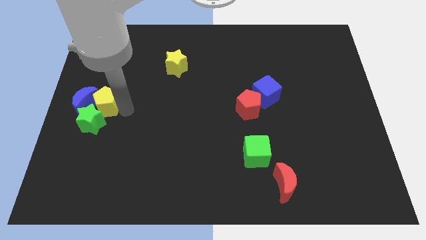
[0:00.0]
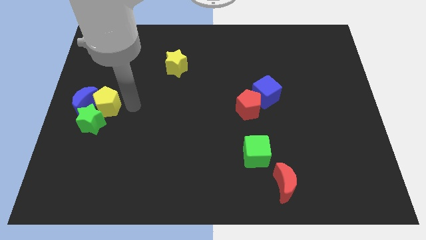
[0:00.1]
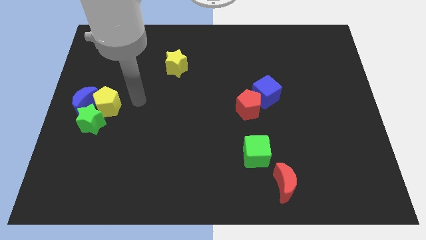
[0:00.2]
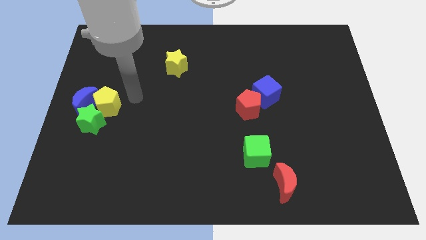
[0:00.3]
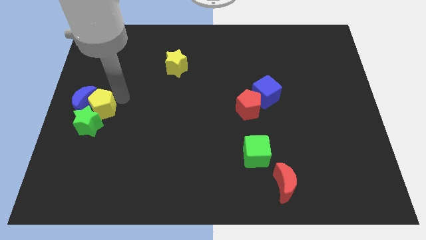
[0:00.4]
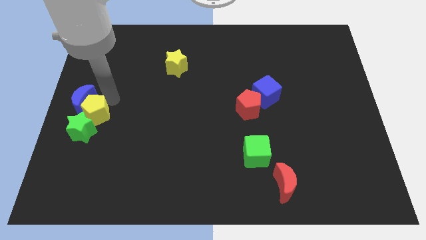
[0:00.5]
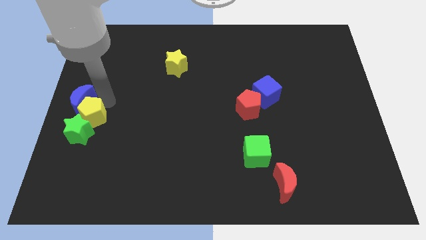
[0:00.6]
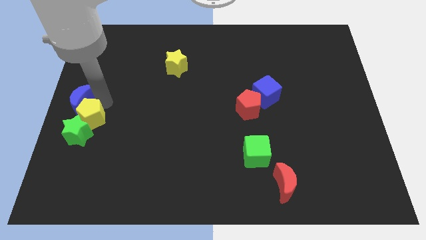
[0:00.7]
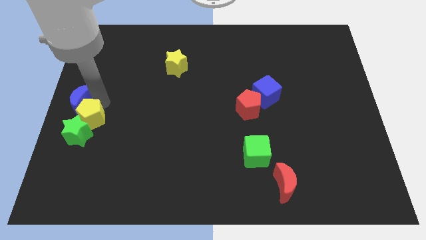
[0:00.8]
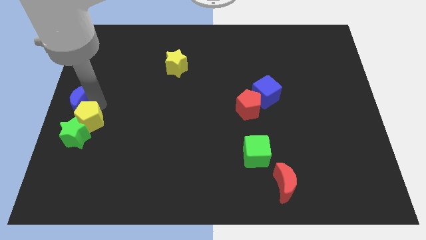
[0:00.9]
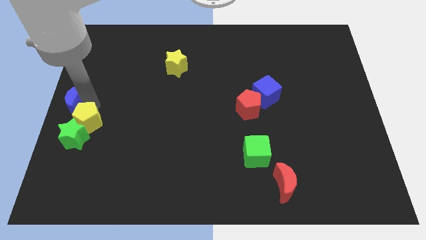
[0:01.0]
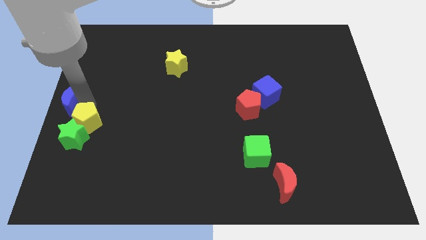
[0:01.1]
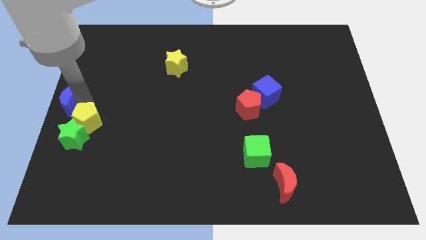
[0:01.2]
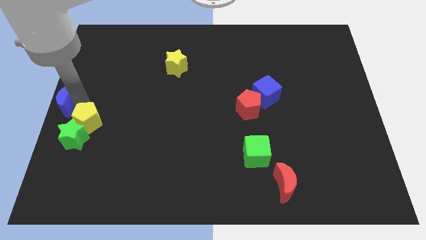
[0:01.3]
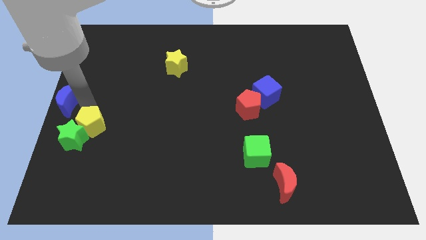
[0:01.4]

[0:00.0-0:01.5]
separate the blue moon from the group of blocks

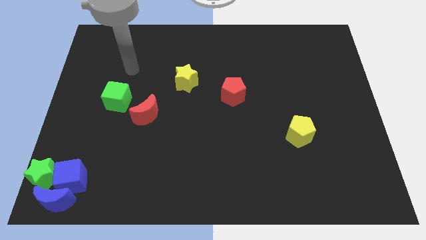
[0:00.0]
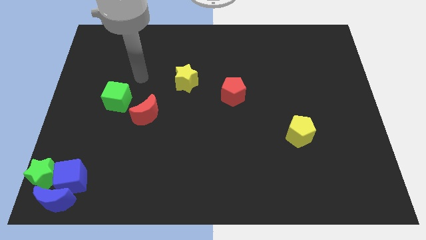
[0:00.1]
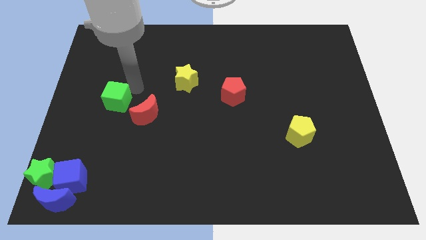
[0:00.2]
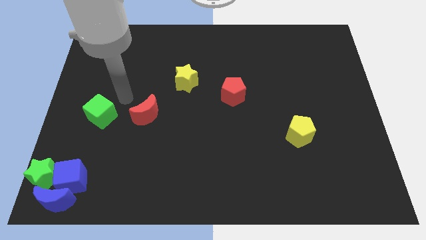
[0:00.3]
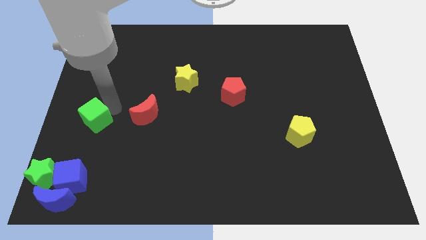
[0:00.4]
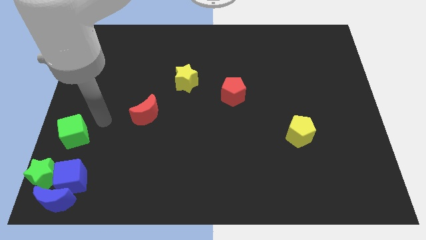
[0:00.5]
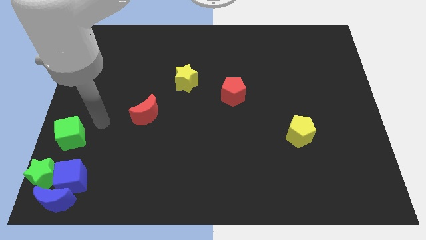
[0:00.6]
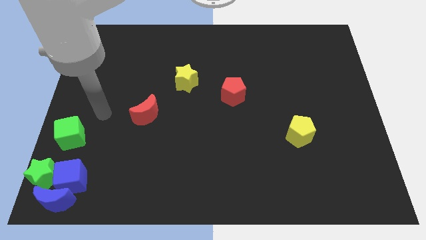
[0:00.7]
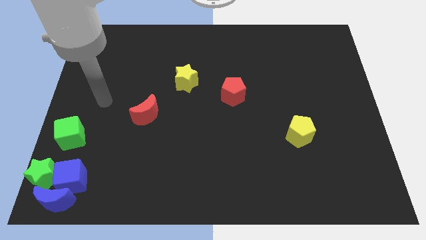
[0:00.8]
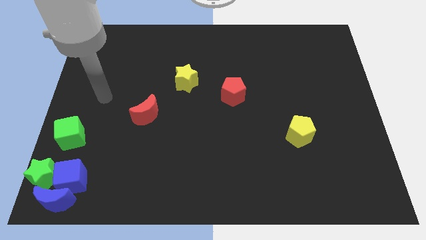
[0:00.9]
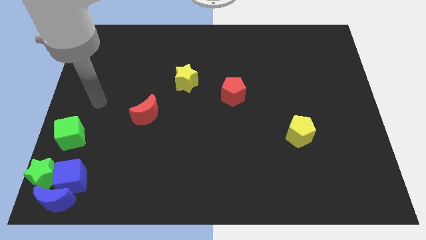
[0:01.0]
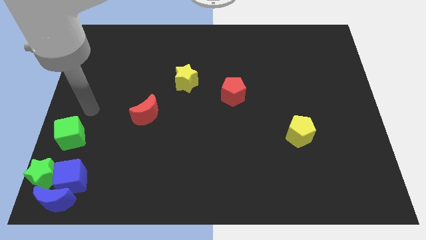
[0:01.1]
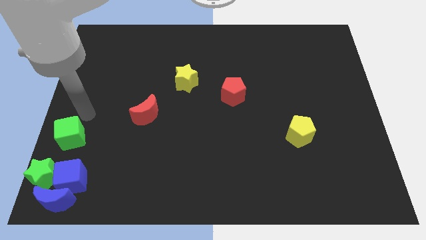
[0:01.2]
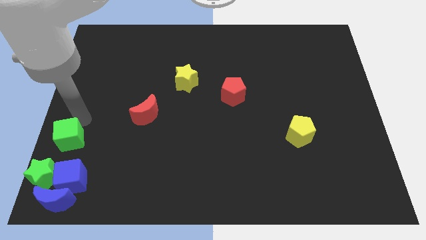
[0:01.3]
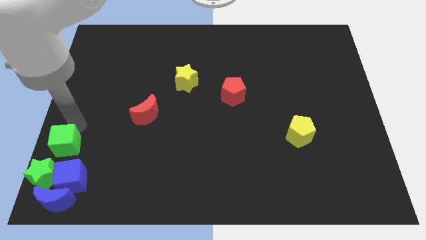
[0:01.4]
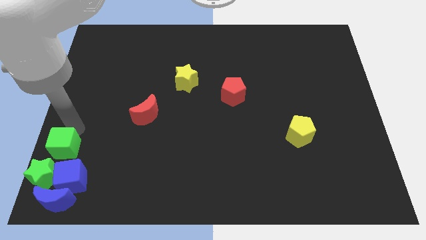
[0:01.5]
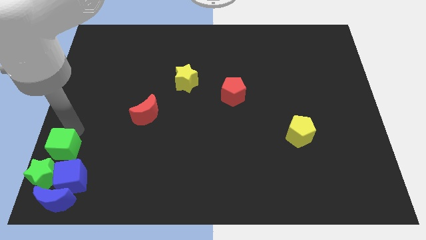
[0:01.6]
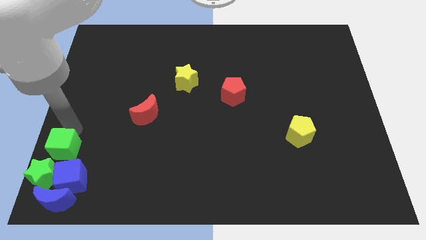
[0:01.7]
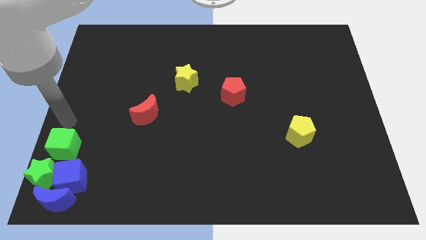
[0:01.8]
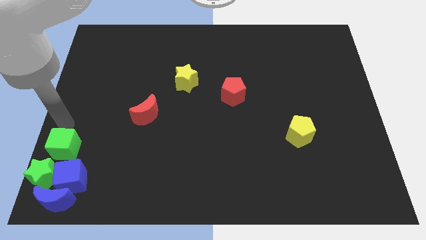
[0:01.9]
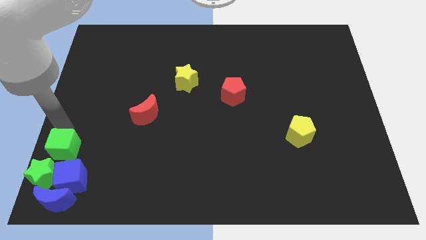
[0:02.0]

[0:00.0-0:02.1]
push green cube into group of blocks in the bottom left

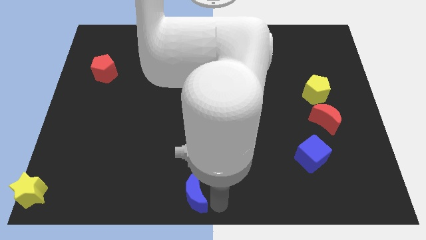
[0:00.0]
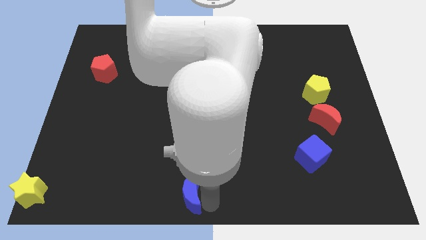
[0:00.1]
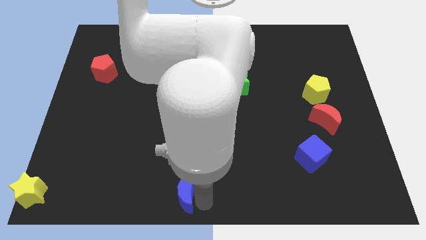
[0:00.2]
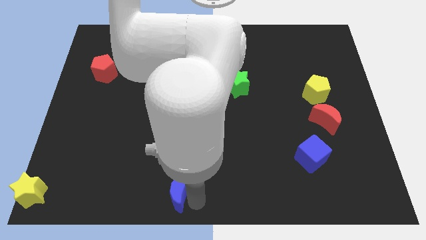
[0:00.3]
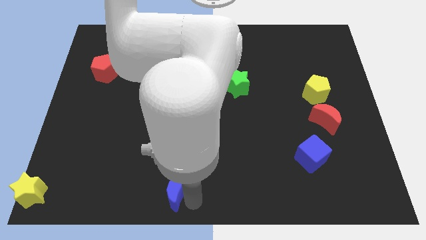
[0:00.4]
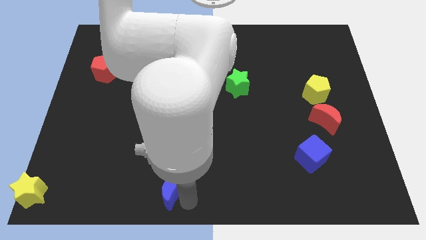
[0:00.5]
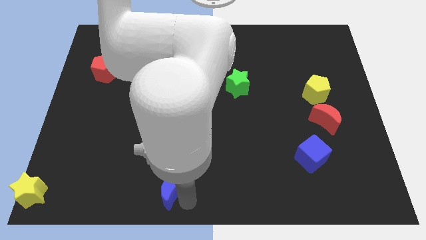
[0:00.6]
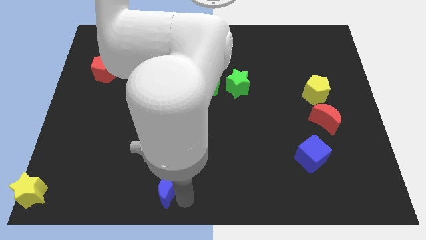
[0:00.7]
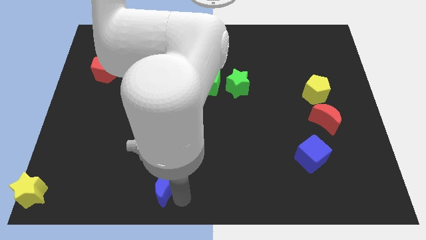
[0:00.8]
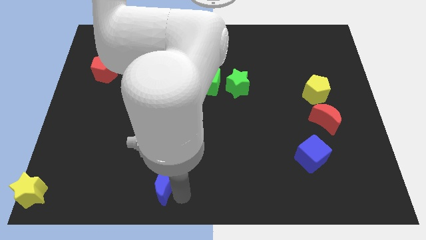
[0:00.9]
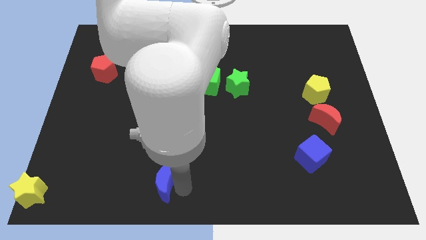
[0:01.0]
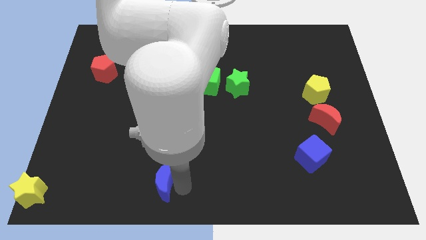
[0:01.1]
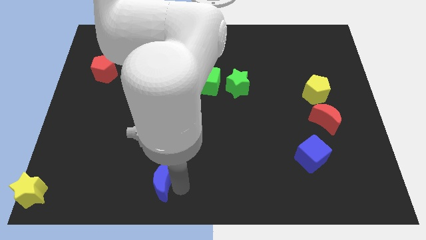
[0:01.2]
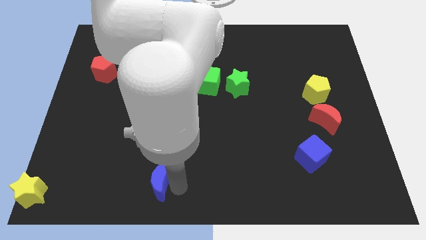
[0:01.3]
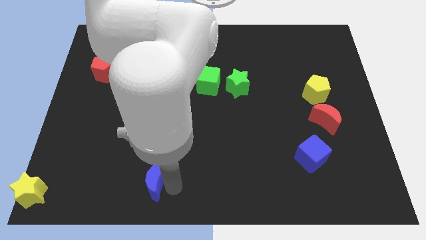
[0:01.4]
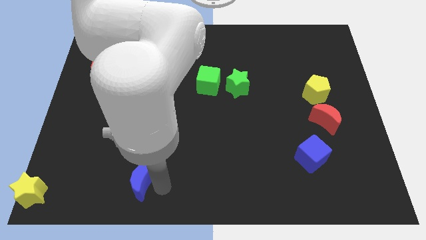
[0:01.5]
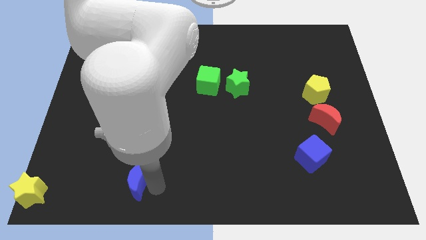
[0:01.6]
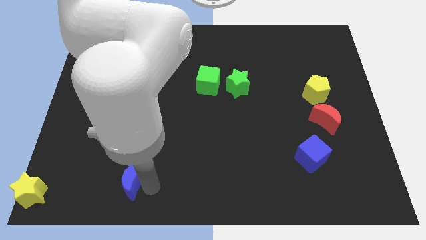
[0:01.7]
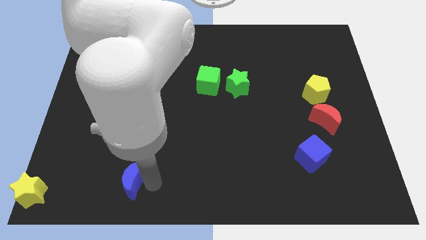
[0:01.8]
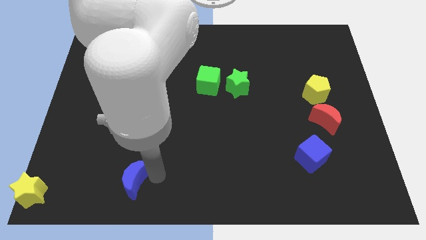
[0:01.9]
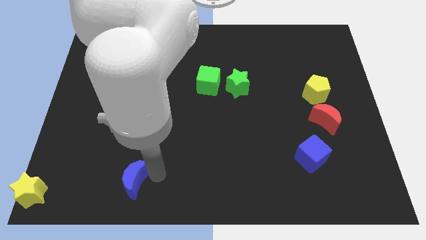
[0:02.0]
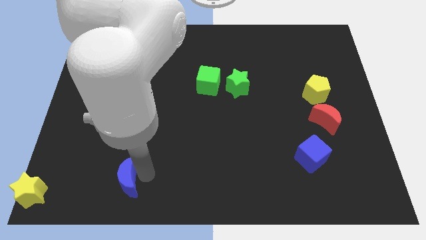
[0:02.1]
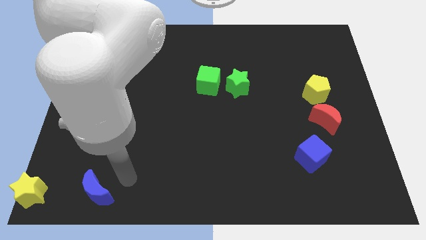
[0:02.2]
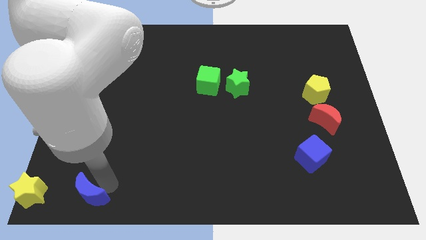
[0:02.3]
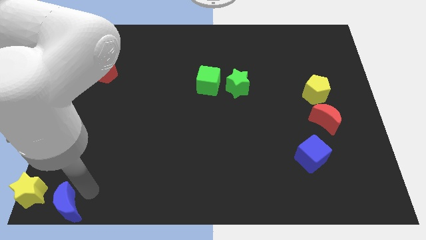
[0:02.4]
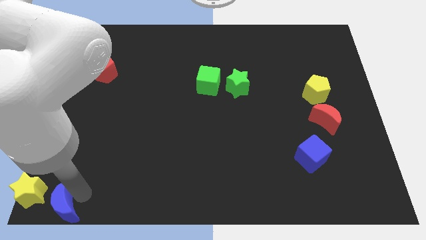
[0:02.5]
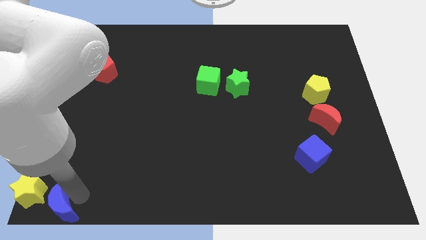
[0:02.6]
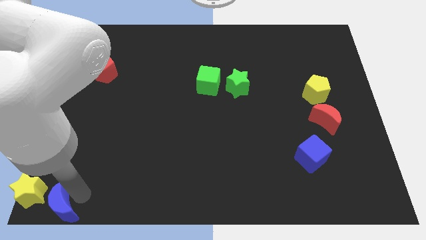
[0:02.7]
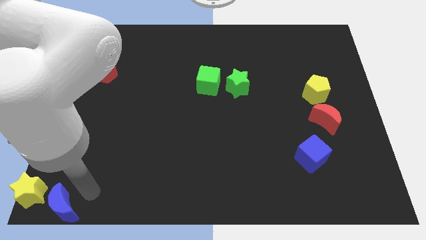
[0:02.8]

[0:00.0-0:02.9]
move the blue crescent to the right of the yellow star

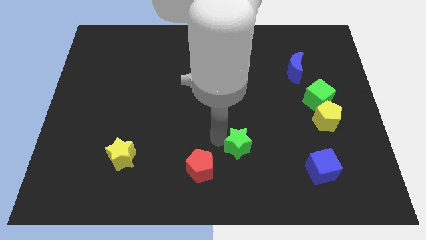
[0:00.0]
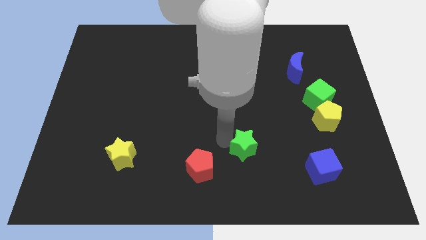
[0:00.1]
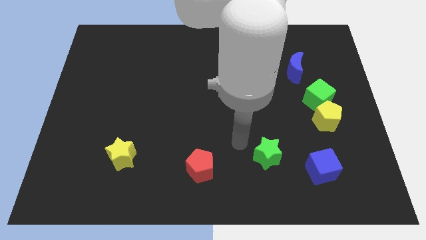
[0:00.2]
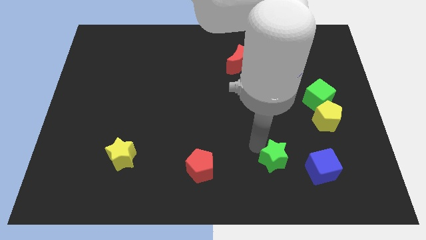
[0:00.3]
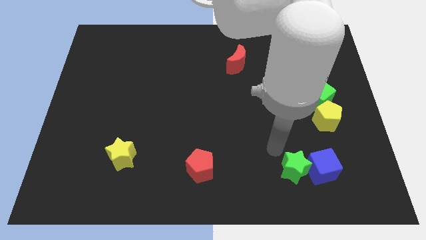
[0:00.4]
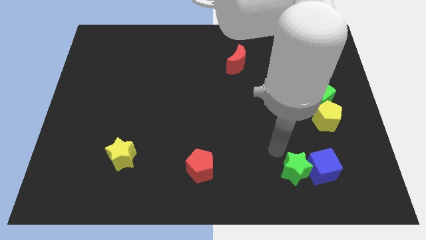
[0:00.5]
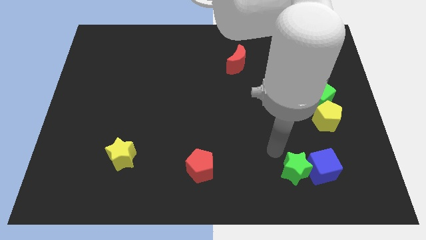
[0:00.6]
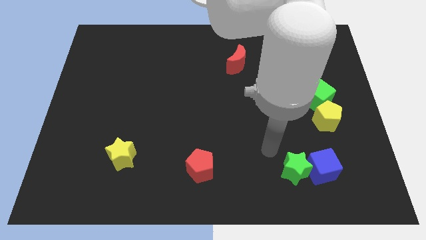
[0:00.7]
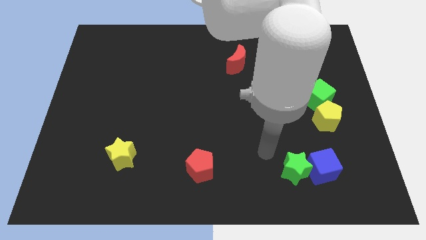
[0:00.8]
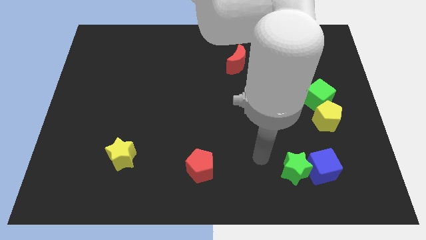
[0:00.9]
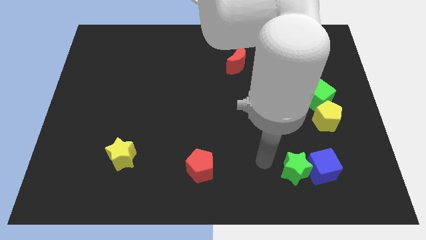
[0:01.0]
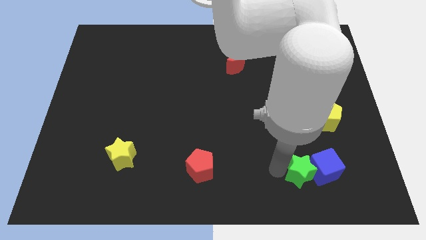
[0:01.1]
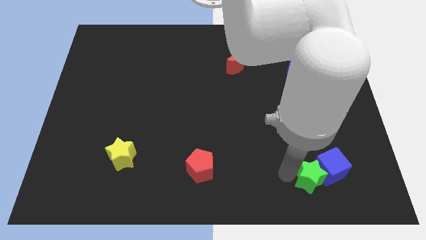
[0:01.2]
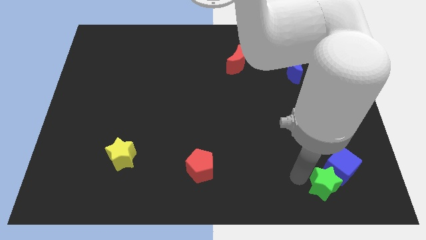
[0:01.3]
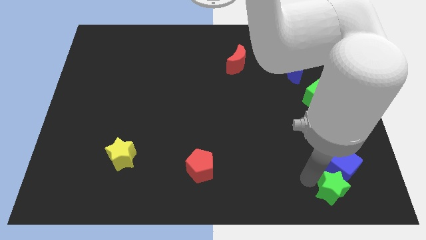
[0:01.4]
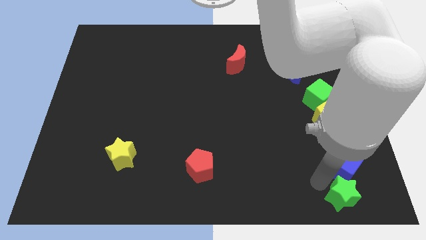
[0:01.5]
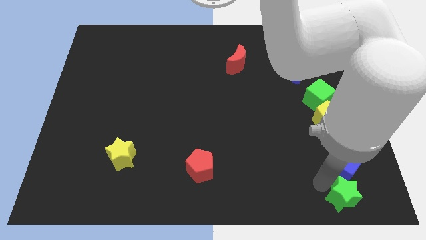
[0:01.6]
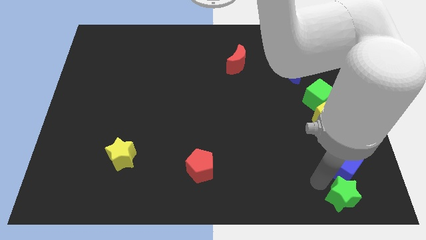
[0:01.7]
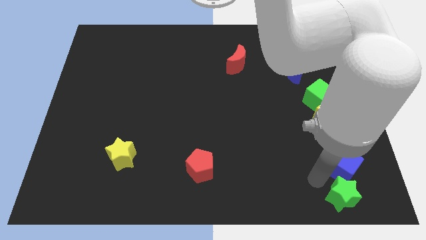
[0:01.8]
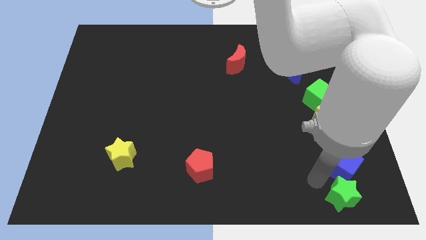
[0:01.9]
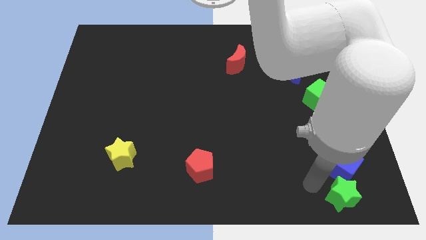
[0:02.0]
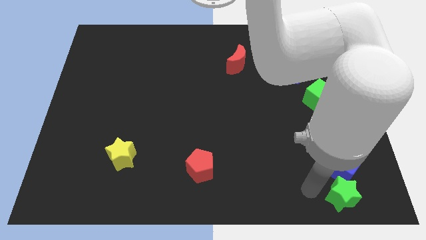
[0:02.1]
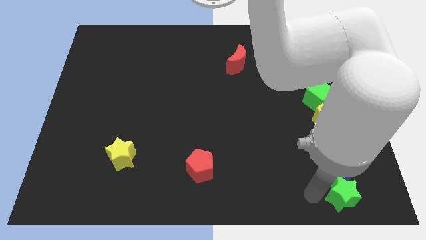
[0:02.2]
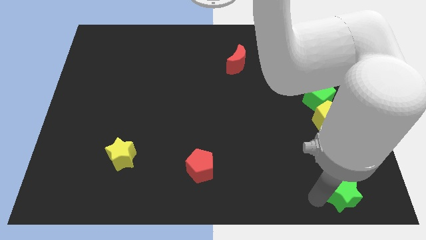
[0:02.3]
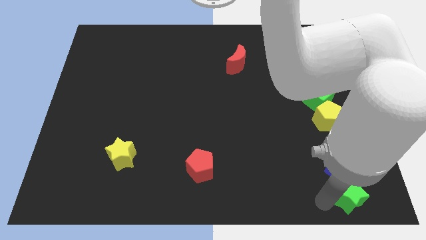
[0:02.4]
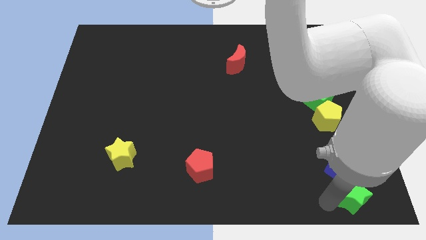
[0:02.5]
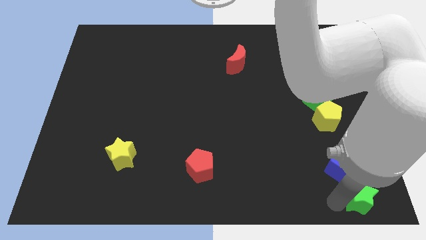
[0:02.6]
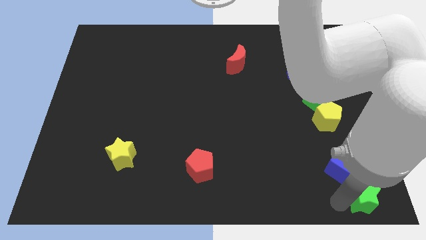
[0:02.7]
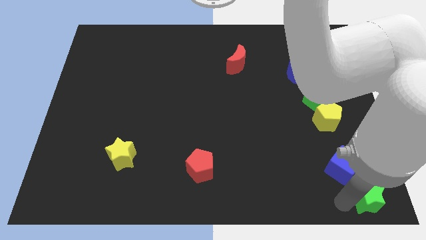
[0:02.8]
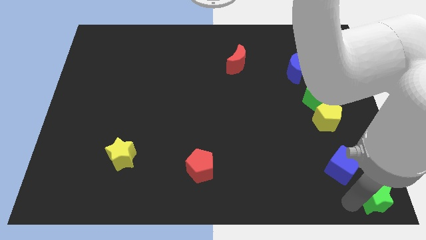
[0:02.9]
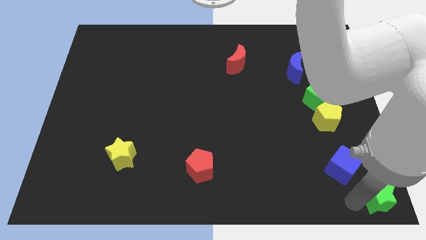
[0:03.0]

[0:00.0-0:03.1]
push the green star to the bottom right to the board
